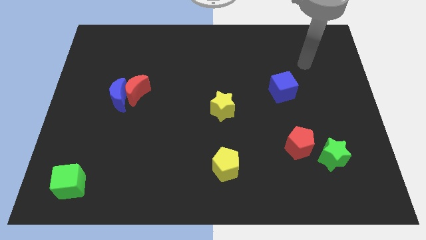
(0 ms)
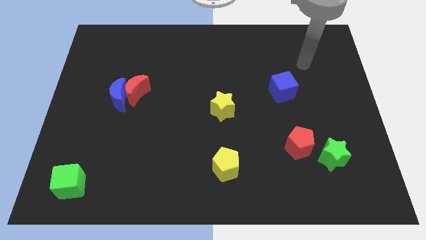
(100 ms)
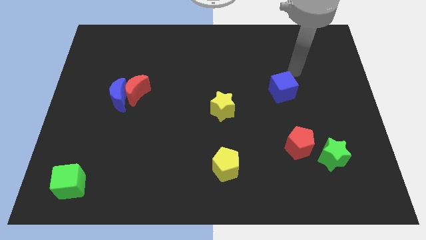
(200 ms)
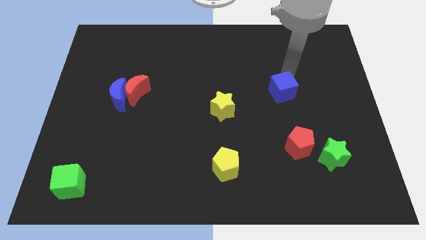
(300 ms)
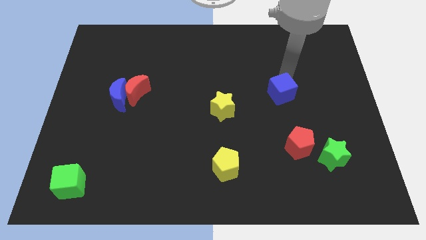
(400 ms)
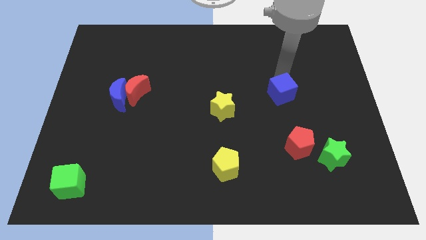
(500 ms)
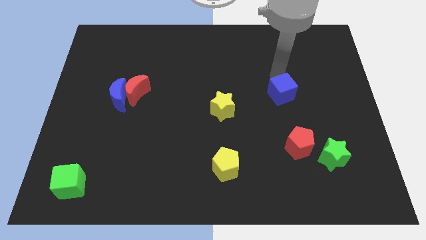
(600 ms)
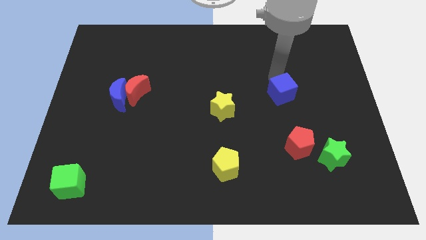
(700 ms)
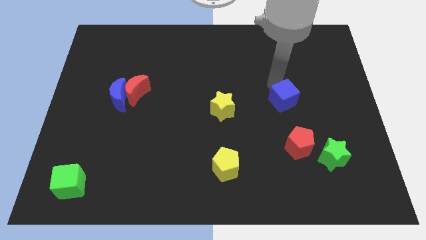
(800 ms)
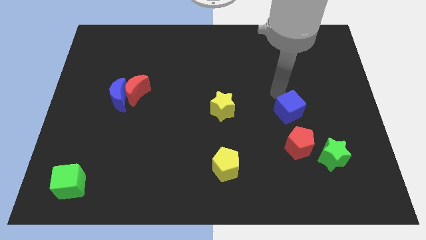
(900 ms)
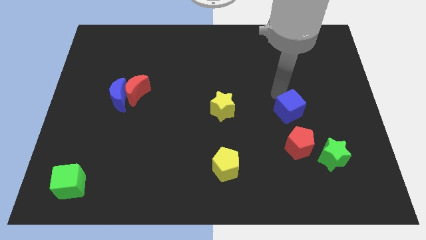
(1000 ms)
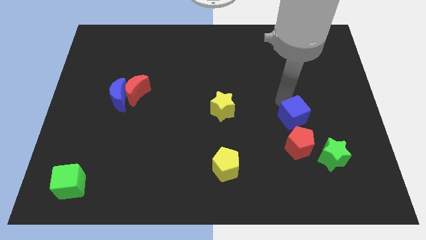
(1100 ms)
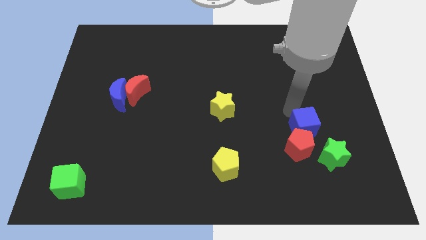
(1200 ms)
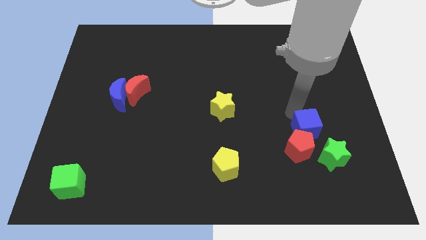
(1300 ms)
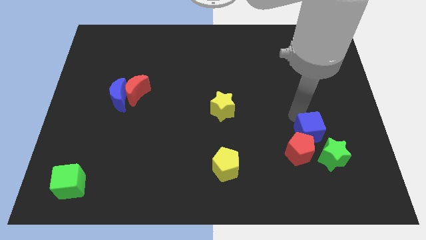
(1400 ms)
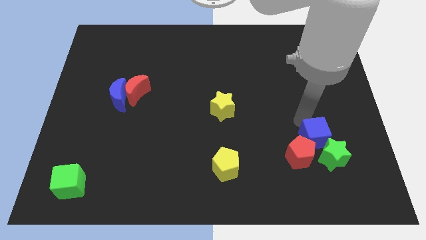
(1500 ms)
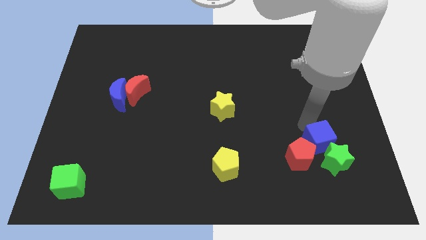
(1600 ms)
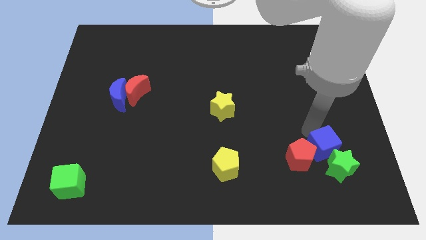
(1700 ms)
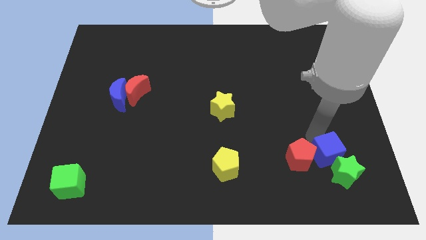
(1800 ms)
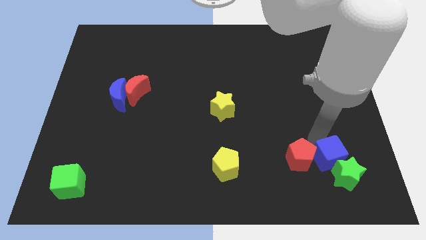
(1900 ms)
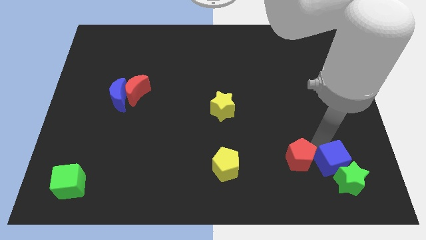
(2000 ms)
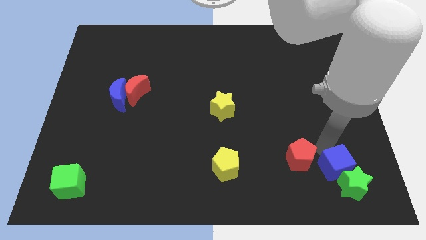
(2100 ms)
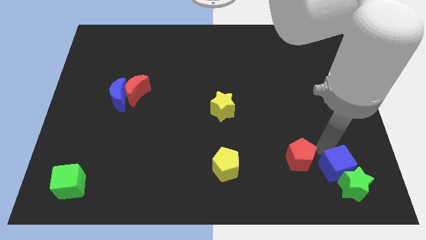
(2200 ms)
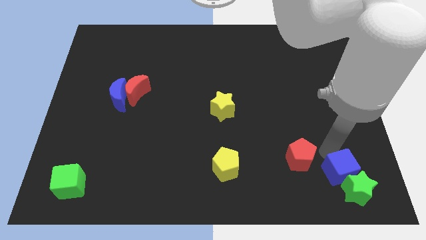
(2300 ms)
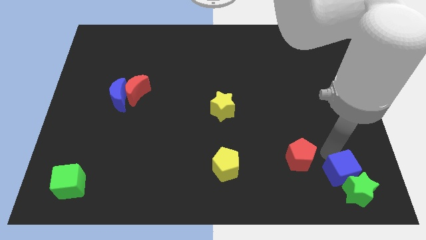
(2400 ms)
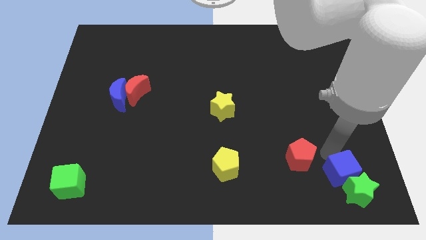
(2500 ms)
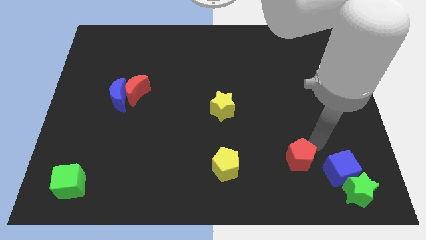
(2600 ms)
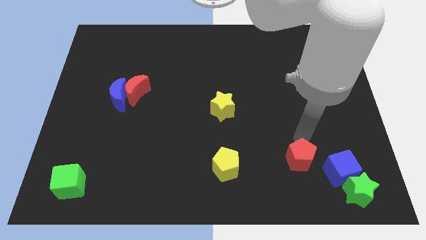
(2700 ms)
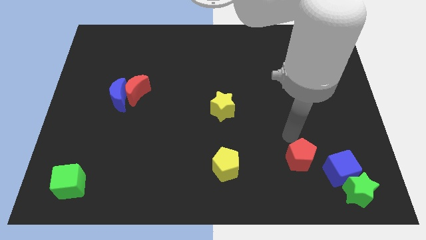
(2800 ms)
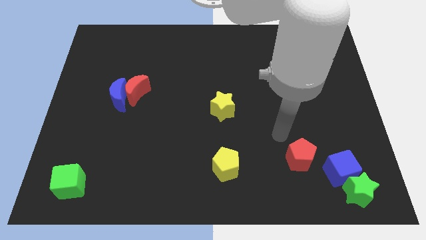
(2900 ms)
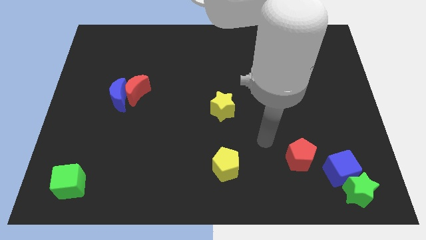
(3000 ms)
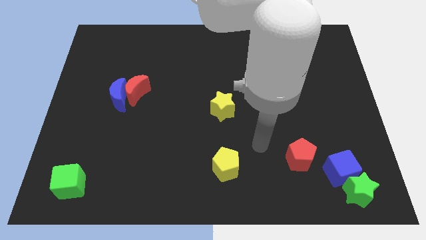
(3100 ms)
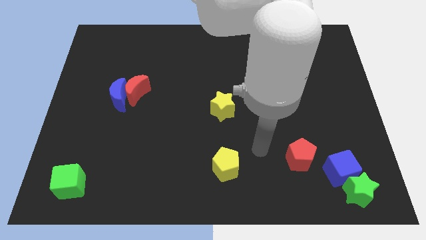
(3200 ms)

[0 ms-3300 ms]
push the blue cube towards the bottom right corner

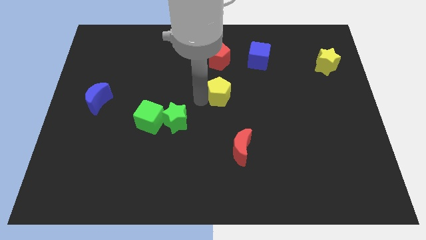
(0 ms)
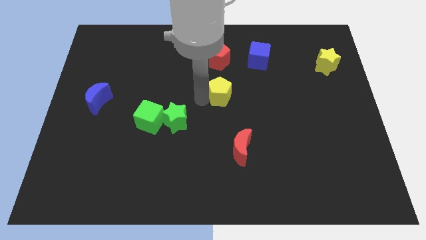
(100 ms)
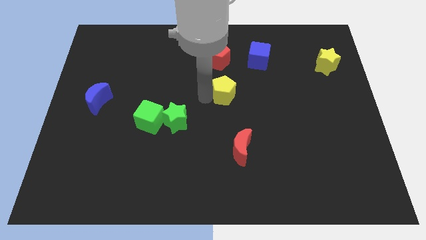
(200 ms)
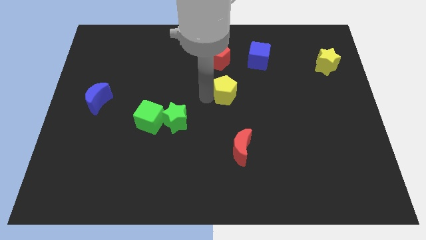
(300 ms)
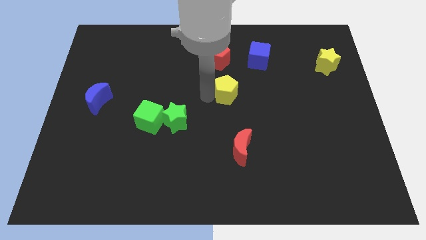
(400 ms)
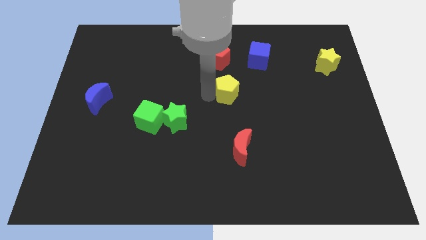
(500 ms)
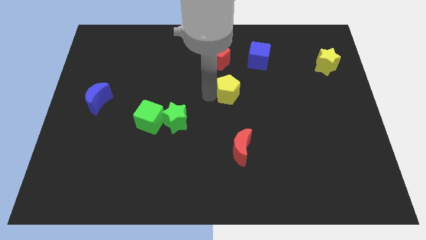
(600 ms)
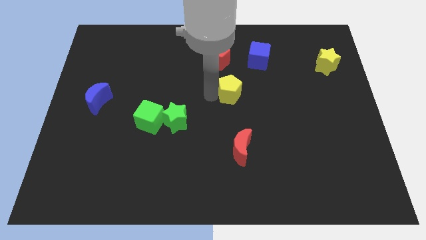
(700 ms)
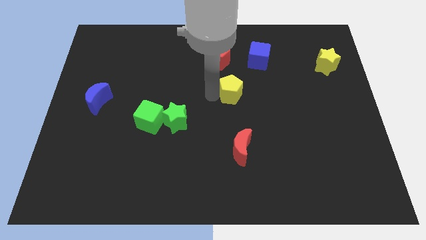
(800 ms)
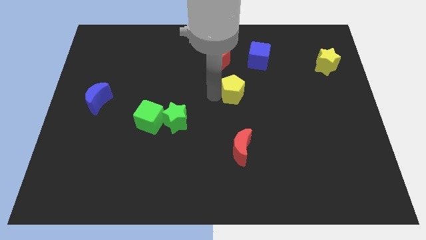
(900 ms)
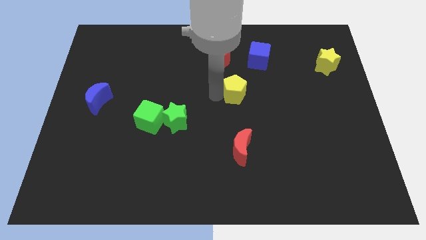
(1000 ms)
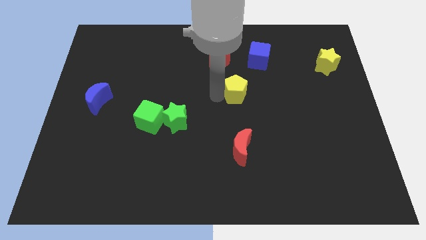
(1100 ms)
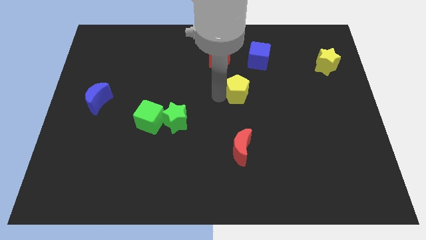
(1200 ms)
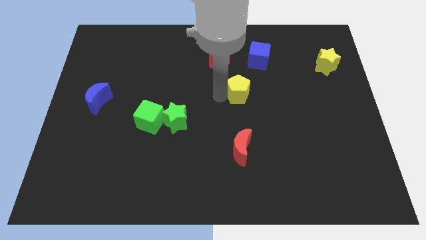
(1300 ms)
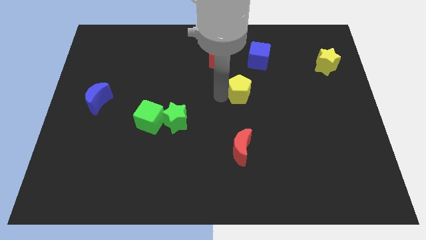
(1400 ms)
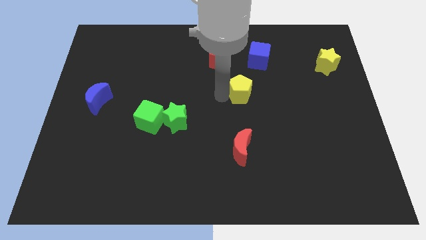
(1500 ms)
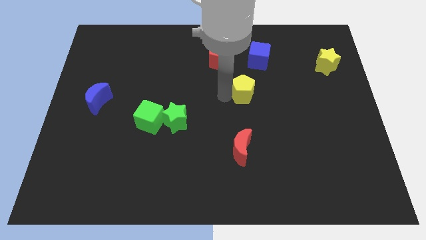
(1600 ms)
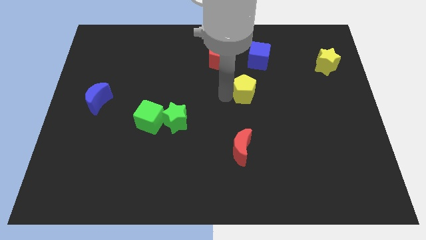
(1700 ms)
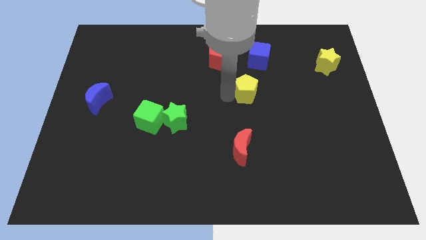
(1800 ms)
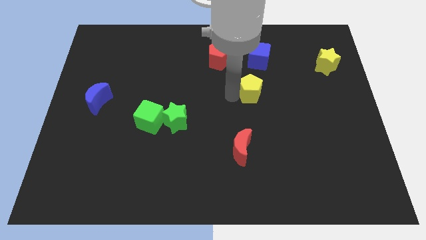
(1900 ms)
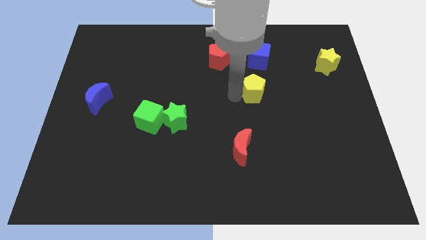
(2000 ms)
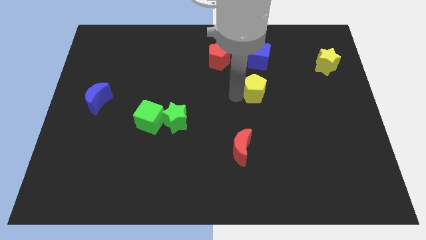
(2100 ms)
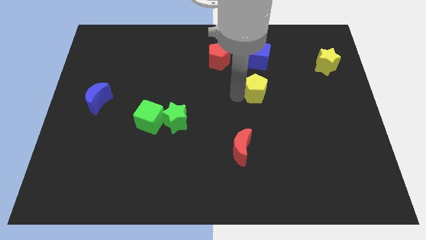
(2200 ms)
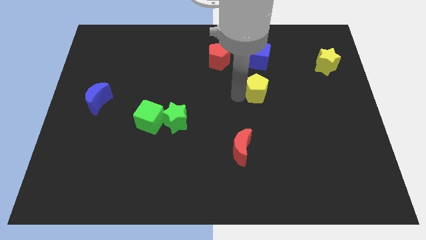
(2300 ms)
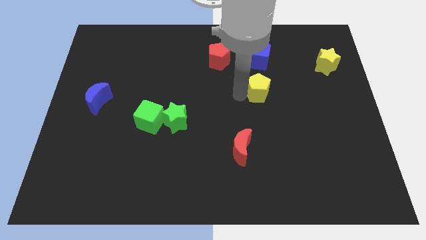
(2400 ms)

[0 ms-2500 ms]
put the yellow pentagon in between the green star and yellow star

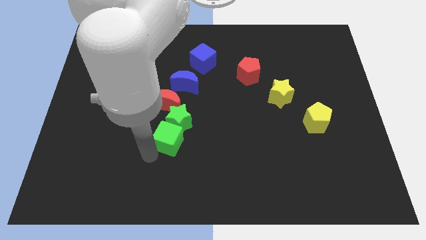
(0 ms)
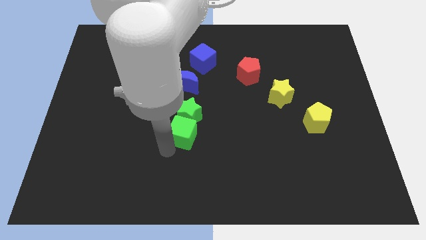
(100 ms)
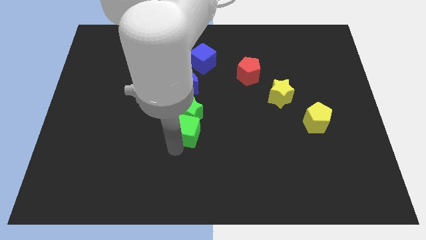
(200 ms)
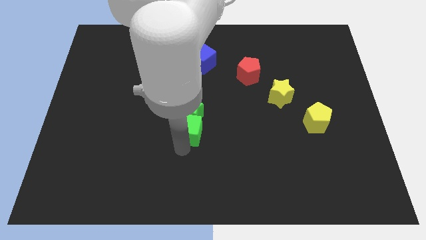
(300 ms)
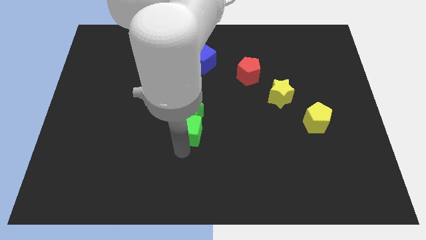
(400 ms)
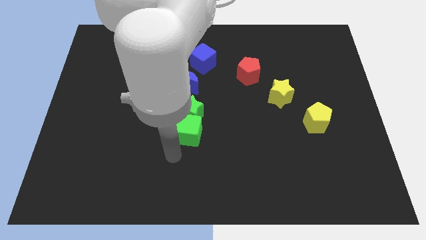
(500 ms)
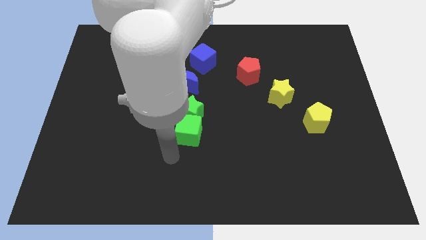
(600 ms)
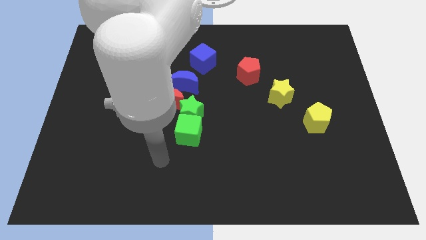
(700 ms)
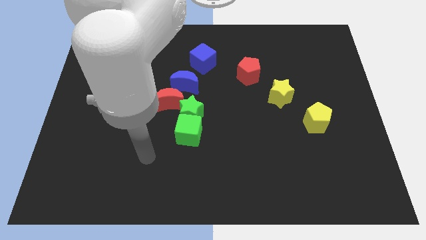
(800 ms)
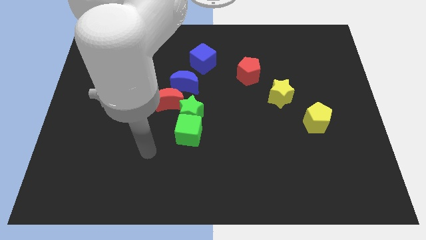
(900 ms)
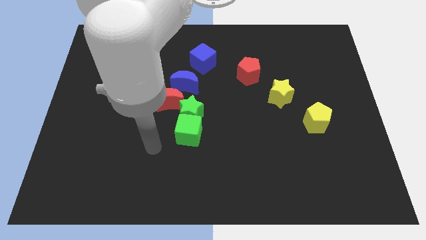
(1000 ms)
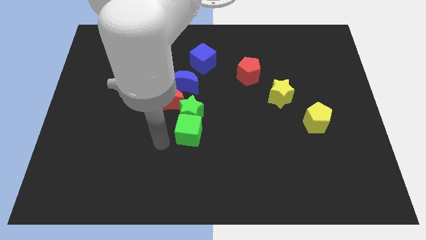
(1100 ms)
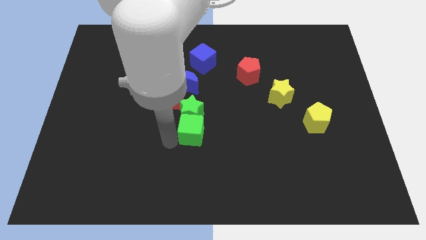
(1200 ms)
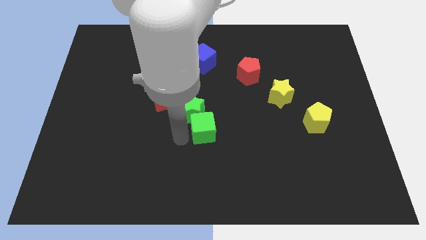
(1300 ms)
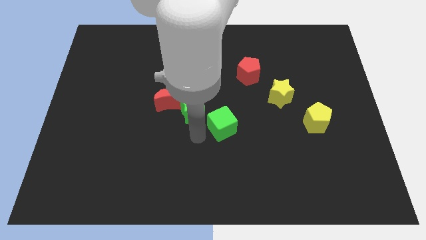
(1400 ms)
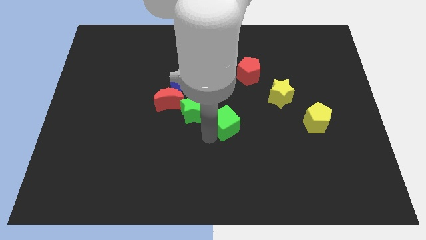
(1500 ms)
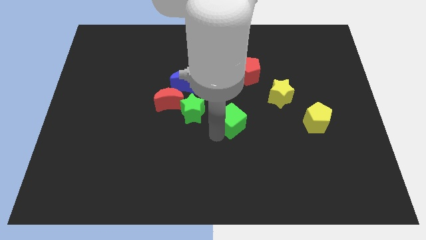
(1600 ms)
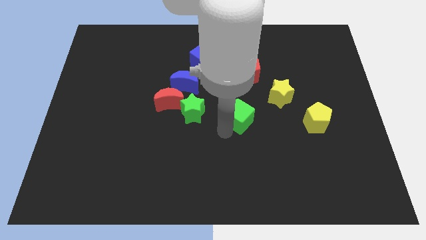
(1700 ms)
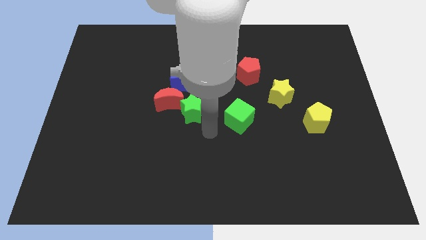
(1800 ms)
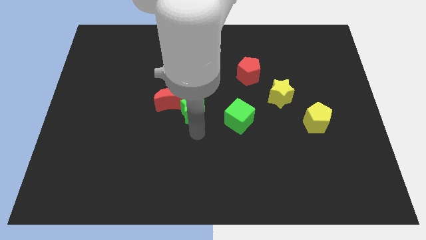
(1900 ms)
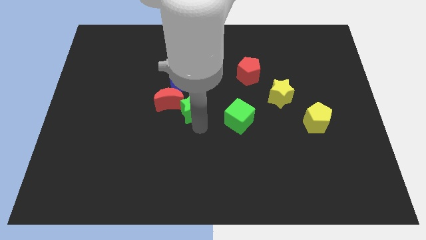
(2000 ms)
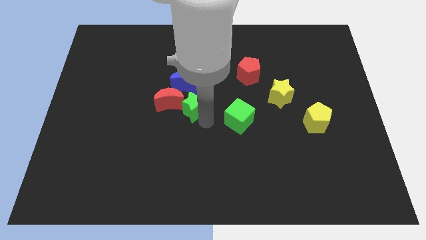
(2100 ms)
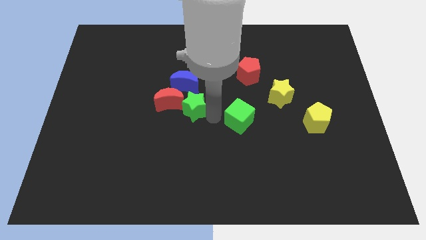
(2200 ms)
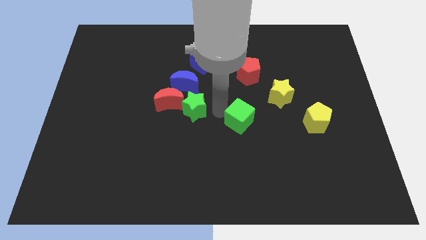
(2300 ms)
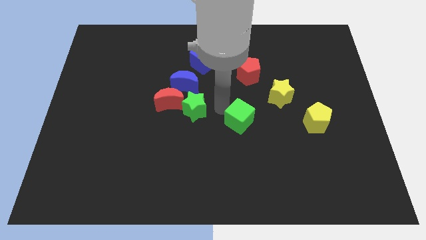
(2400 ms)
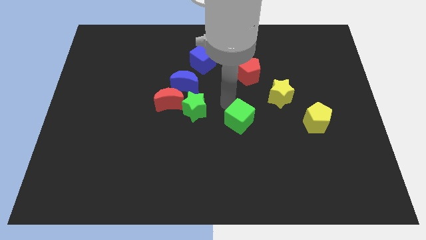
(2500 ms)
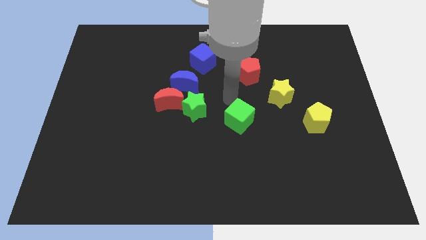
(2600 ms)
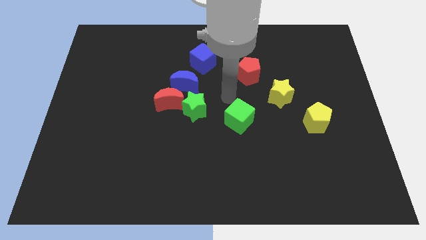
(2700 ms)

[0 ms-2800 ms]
move the green cube to the center of the board

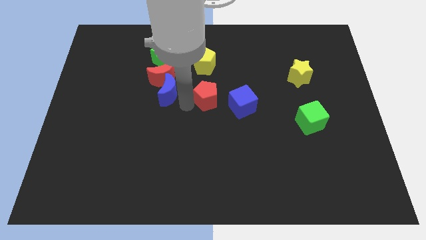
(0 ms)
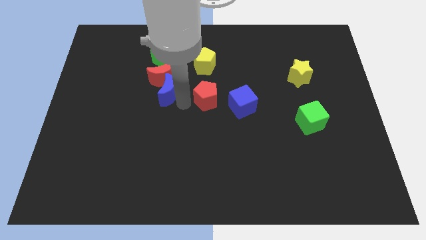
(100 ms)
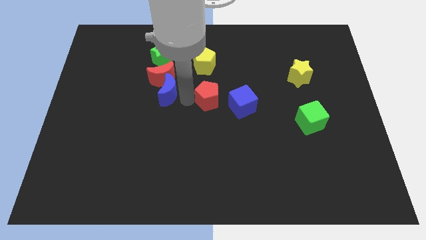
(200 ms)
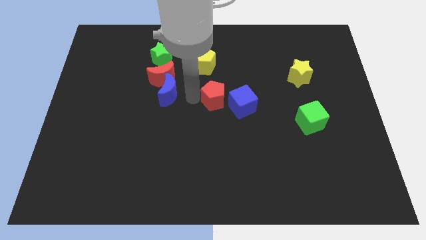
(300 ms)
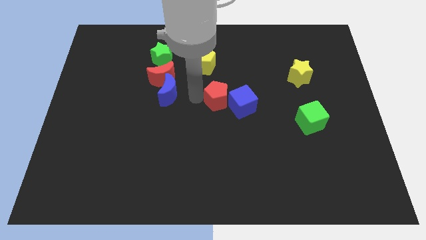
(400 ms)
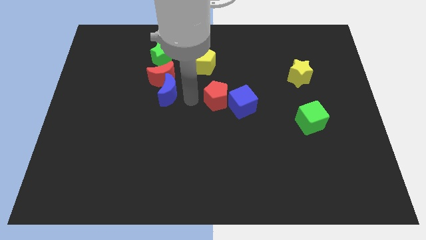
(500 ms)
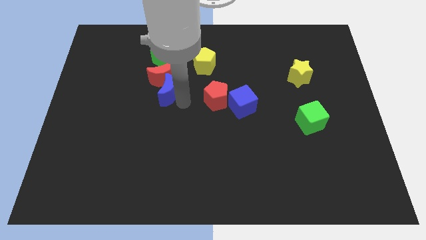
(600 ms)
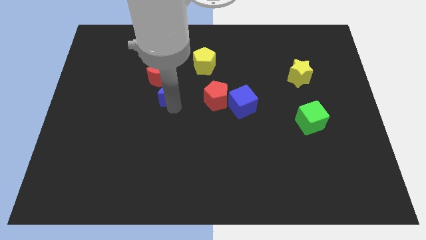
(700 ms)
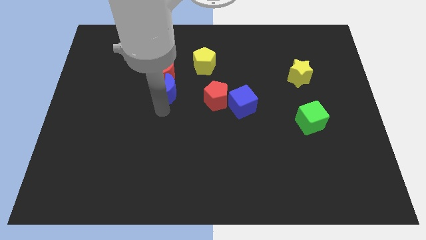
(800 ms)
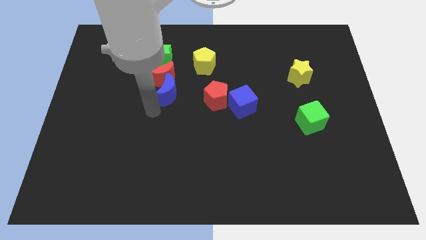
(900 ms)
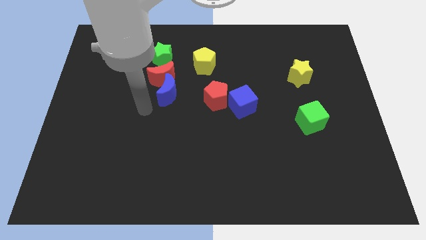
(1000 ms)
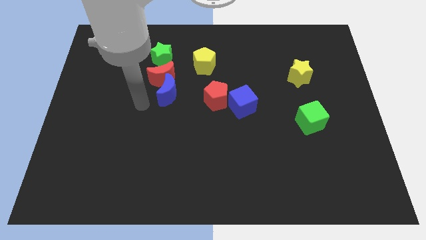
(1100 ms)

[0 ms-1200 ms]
push the red pentagon slightly to the left of the blue cube
